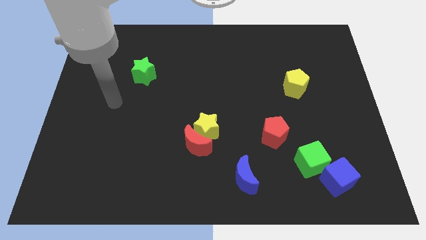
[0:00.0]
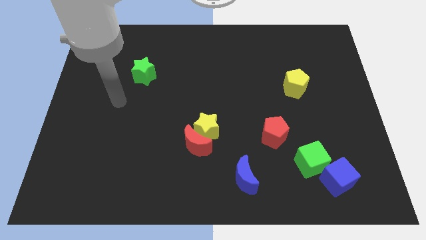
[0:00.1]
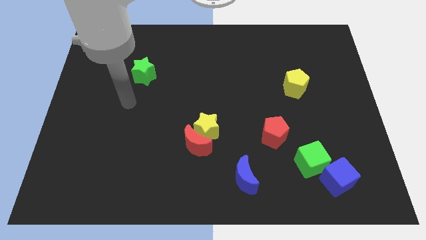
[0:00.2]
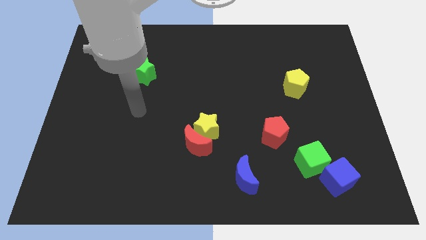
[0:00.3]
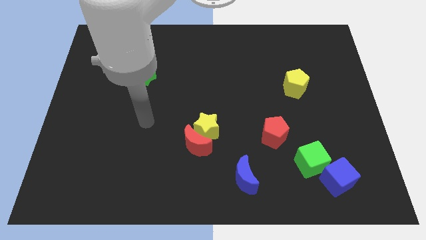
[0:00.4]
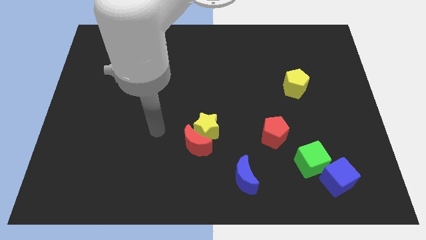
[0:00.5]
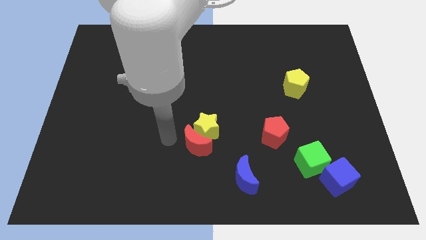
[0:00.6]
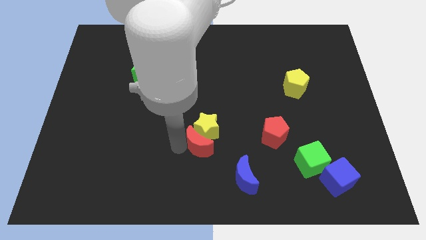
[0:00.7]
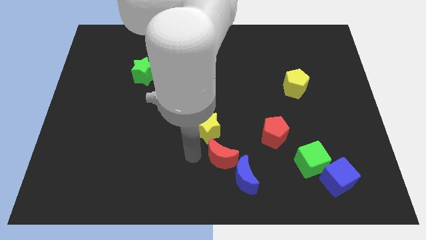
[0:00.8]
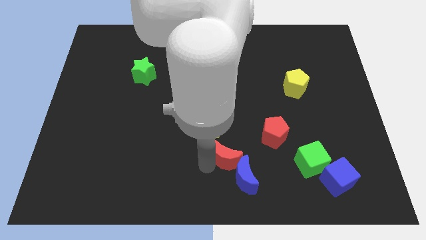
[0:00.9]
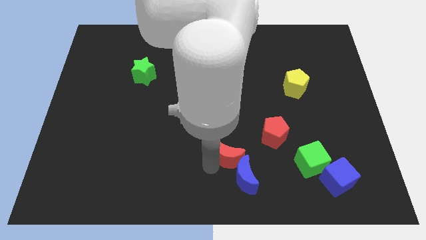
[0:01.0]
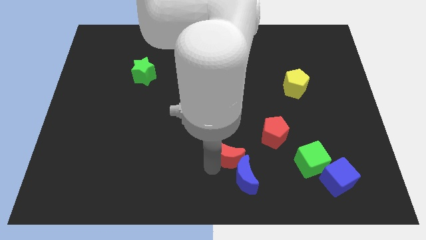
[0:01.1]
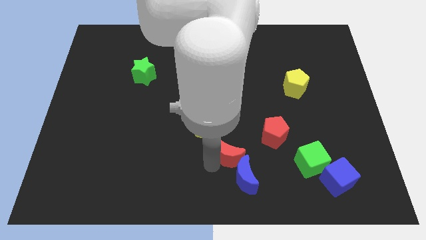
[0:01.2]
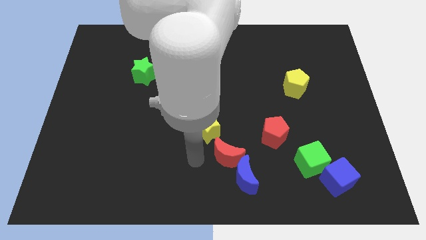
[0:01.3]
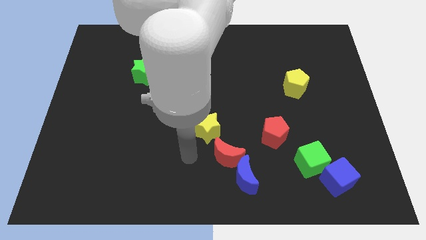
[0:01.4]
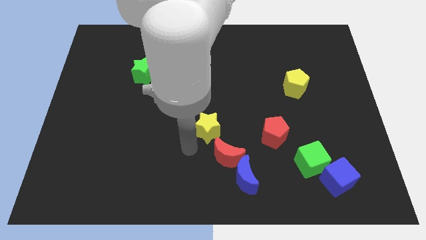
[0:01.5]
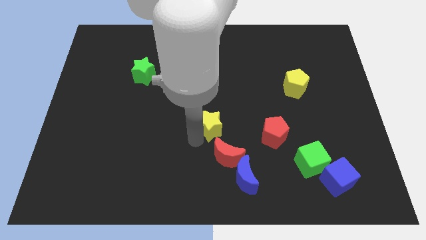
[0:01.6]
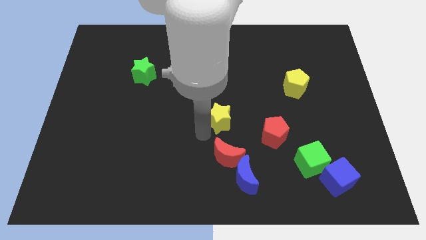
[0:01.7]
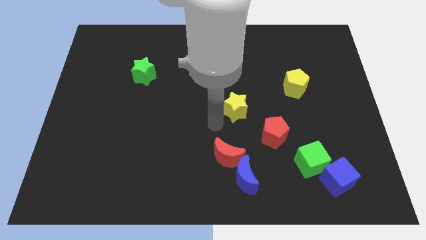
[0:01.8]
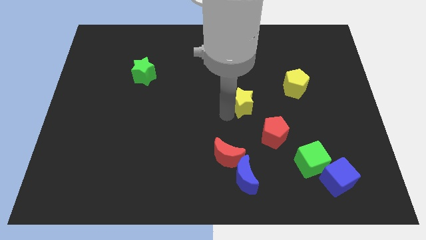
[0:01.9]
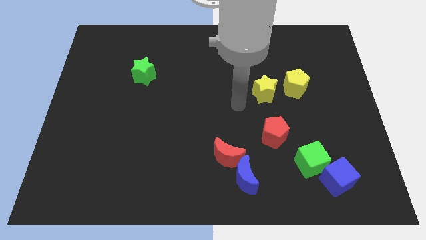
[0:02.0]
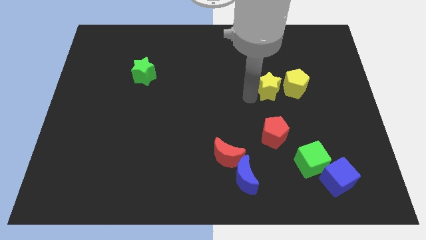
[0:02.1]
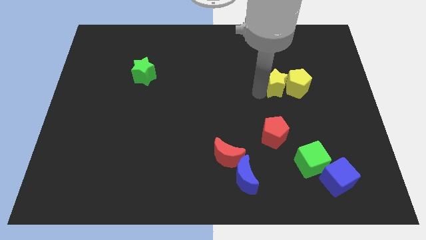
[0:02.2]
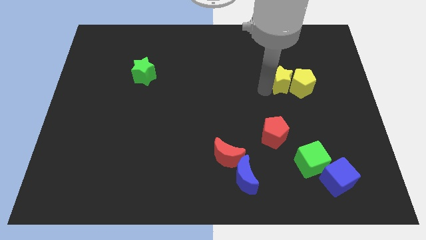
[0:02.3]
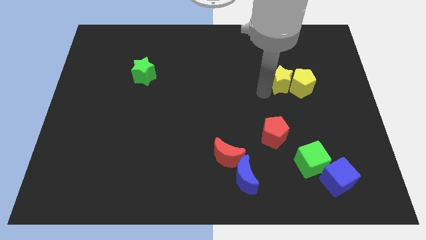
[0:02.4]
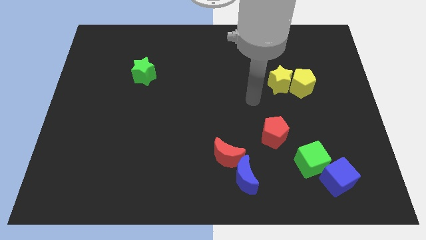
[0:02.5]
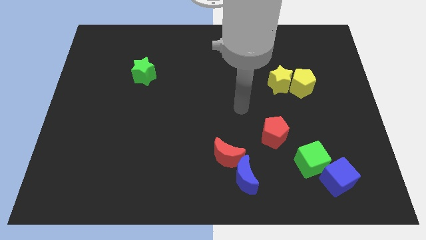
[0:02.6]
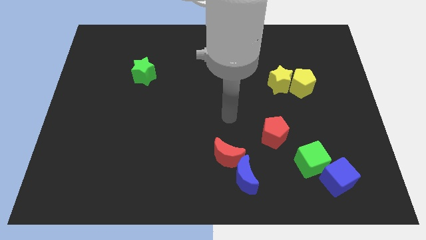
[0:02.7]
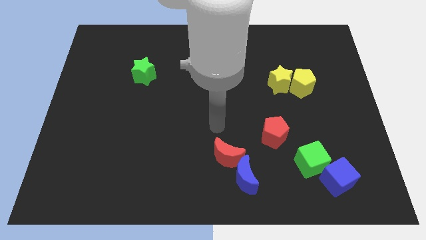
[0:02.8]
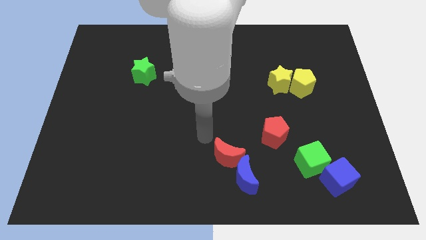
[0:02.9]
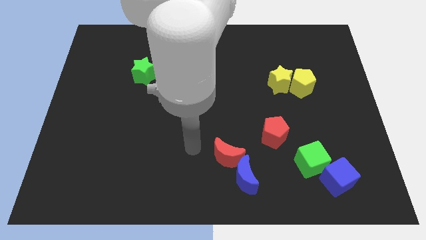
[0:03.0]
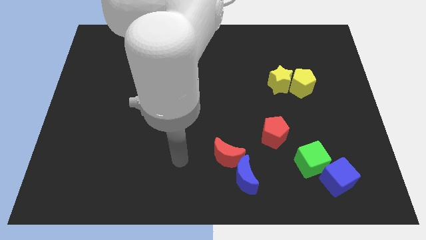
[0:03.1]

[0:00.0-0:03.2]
move the yellow star left to the yellow pentagon

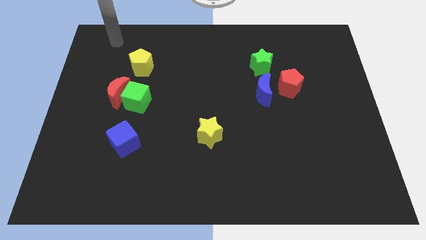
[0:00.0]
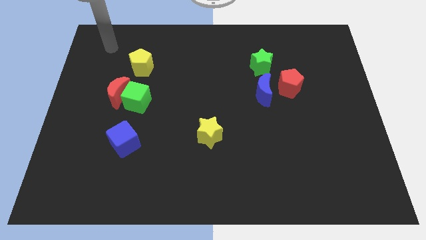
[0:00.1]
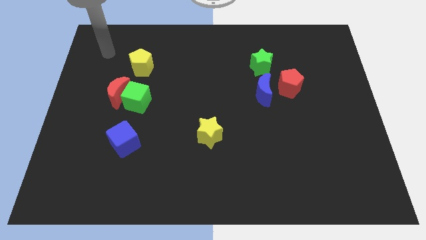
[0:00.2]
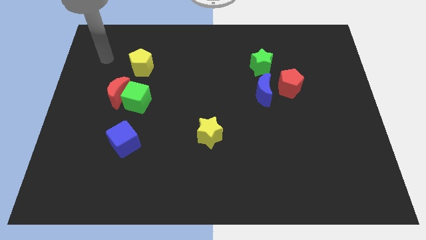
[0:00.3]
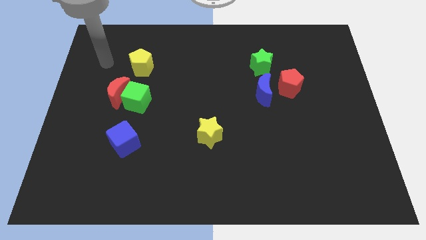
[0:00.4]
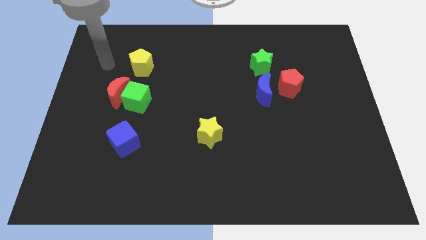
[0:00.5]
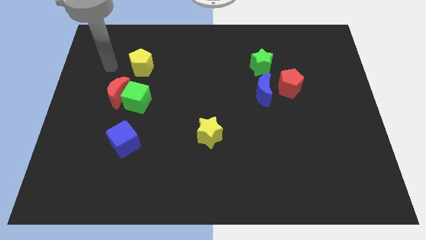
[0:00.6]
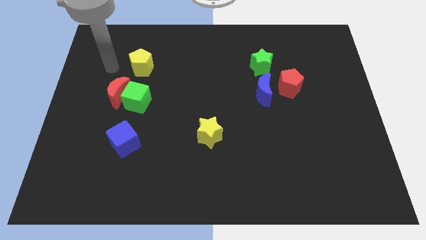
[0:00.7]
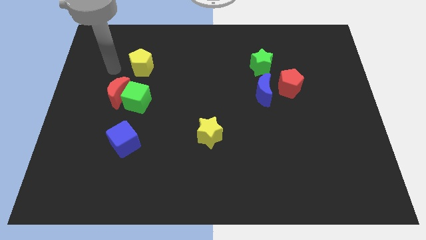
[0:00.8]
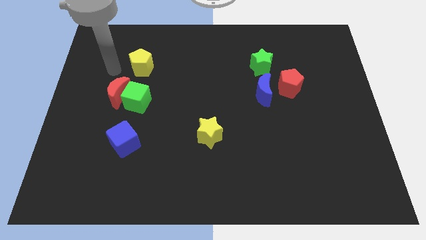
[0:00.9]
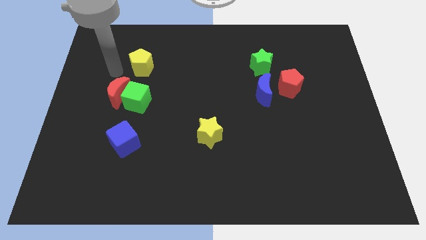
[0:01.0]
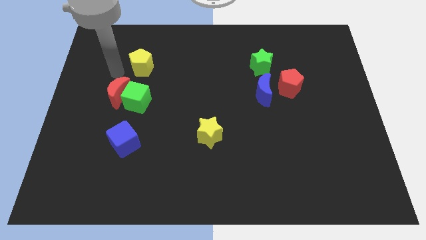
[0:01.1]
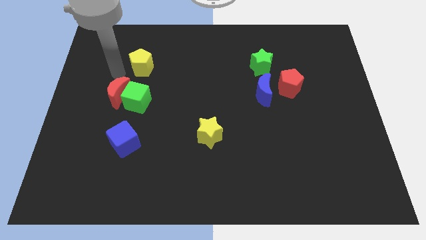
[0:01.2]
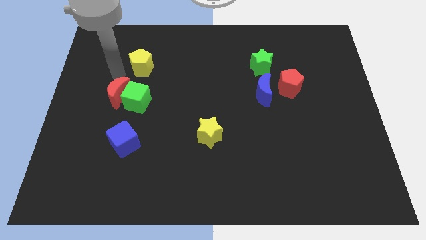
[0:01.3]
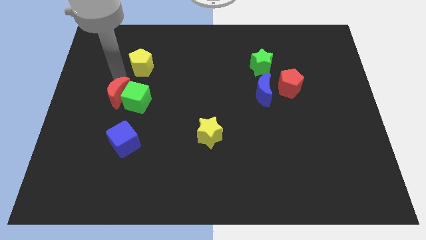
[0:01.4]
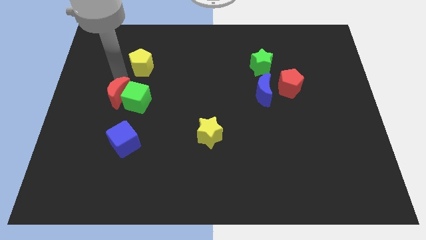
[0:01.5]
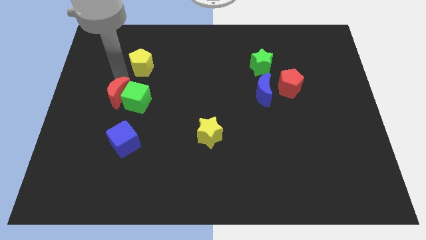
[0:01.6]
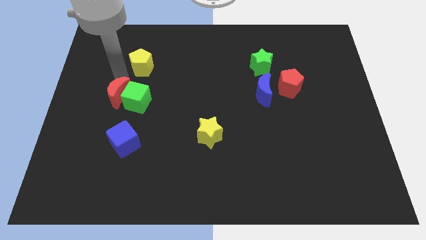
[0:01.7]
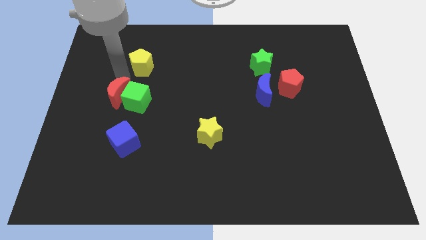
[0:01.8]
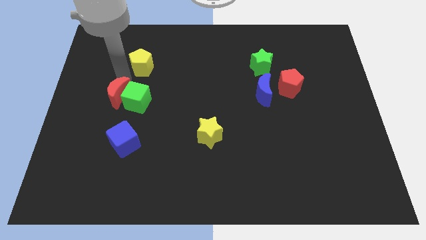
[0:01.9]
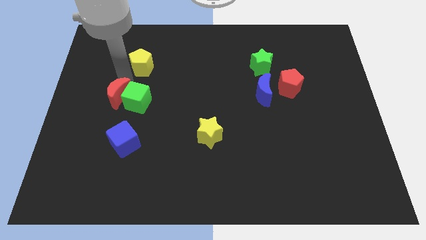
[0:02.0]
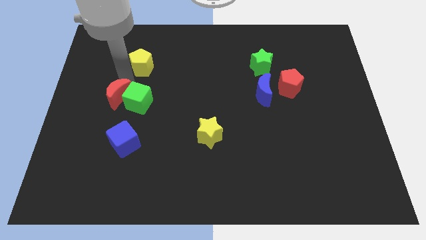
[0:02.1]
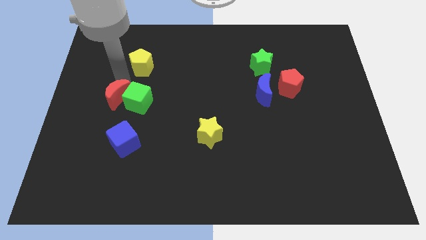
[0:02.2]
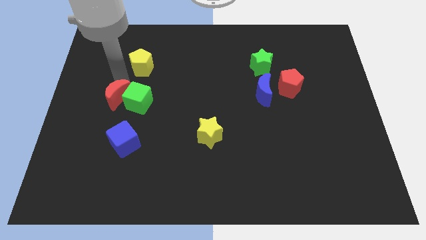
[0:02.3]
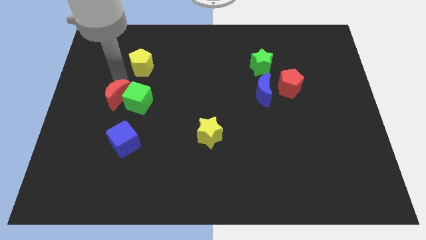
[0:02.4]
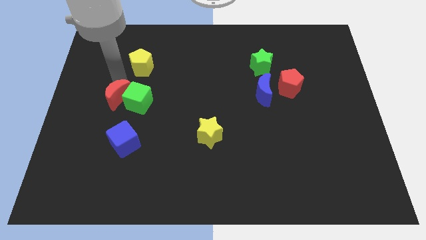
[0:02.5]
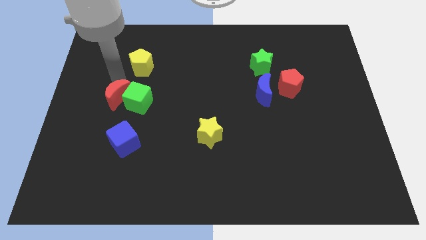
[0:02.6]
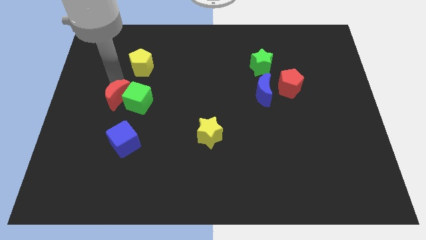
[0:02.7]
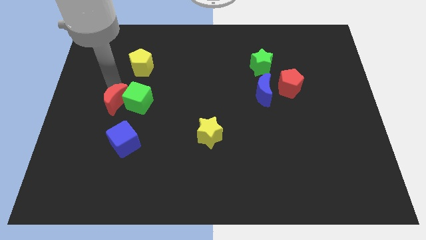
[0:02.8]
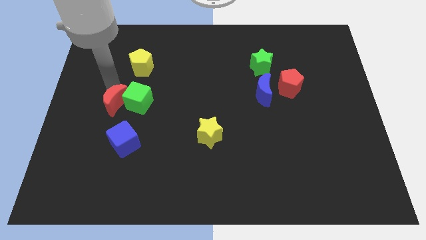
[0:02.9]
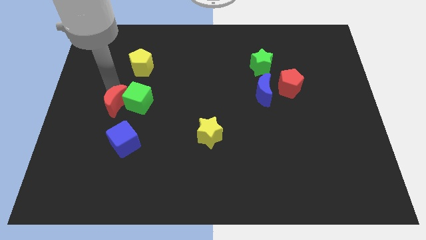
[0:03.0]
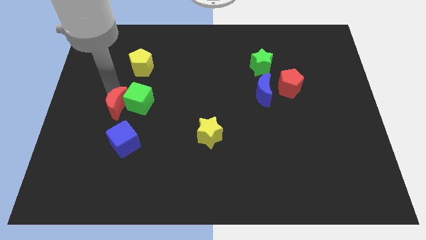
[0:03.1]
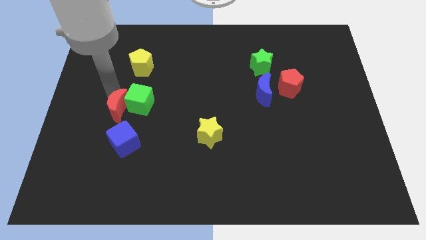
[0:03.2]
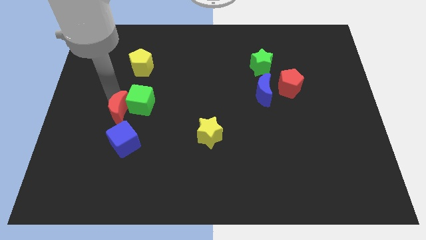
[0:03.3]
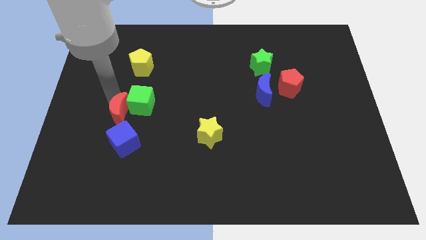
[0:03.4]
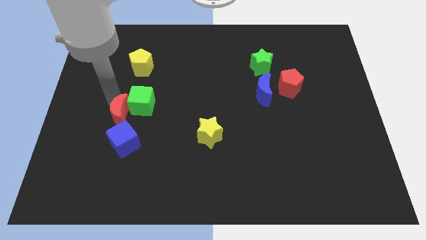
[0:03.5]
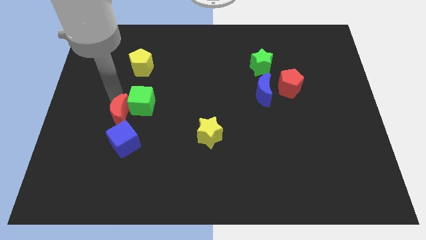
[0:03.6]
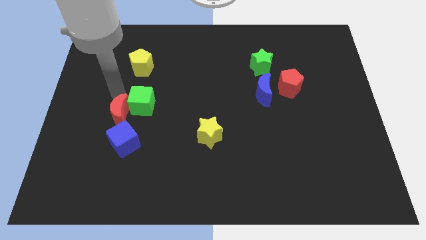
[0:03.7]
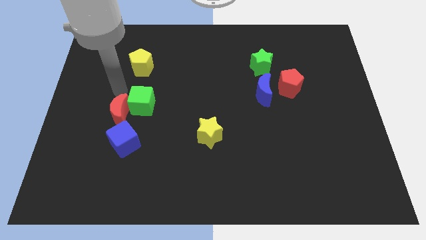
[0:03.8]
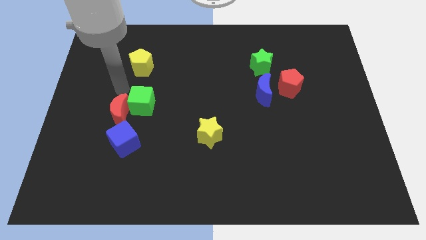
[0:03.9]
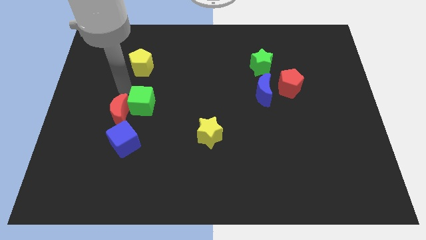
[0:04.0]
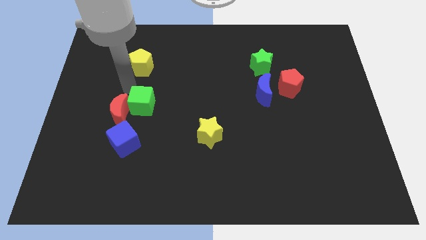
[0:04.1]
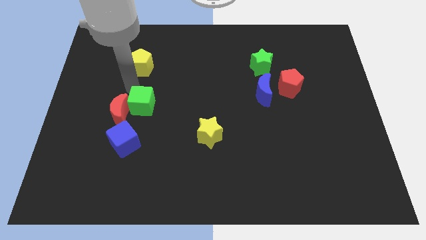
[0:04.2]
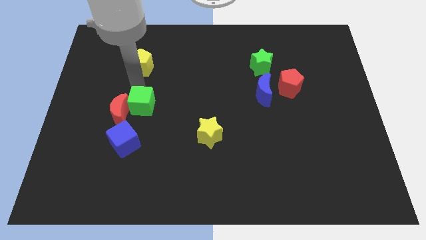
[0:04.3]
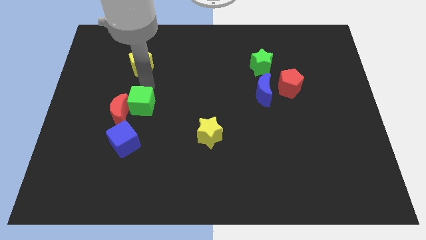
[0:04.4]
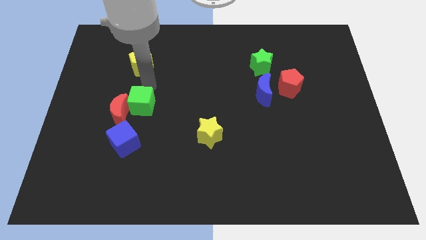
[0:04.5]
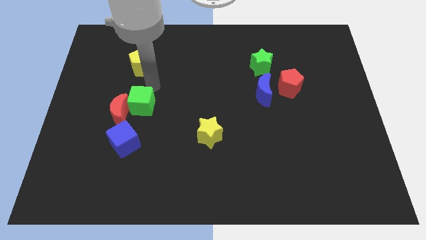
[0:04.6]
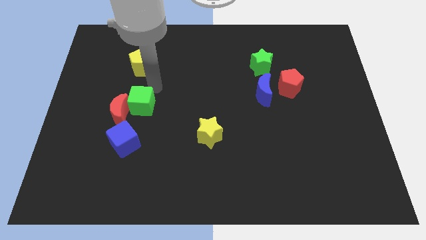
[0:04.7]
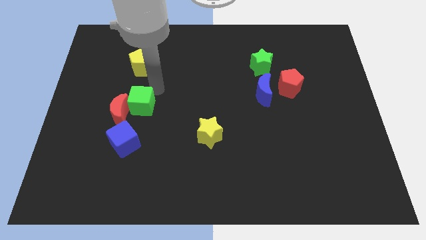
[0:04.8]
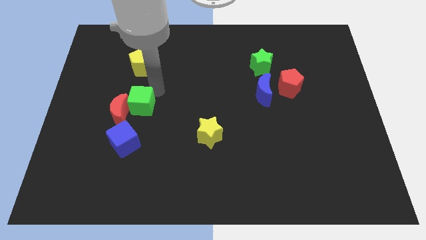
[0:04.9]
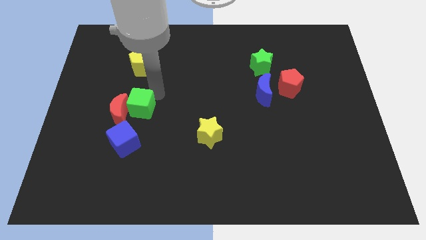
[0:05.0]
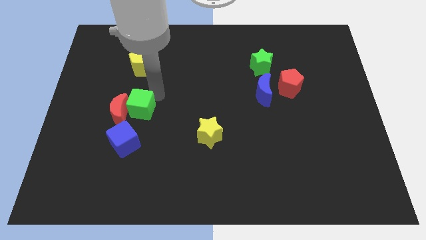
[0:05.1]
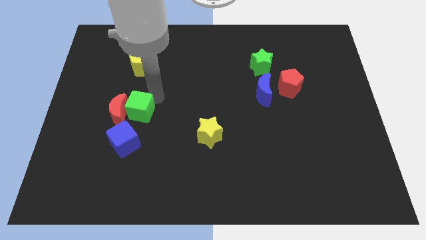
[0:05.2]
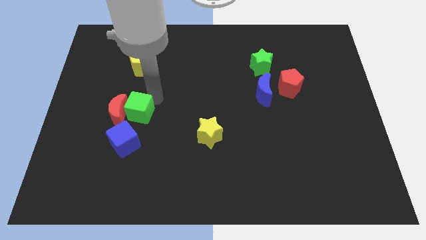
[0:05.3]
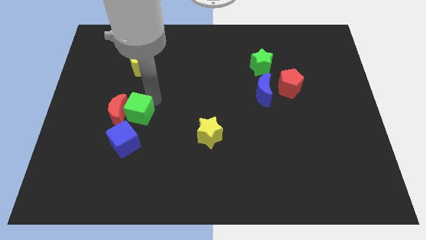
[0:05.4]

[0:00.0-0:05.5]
slightly push the green cube and the red crescent above the blue cube
